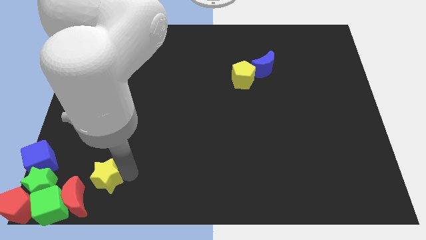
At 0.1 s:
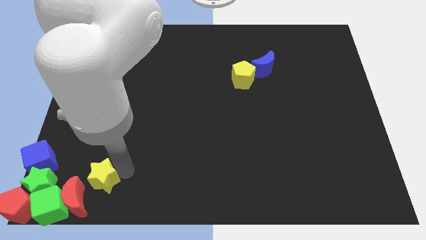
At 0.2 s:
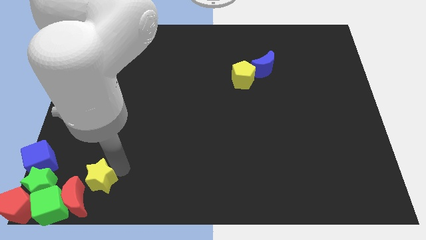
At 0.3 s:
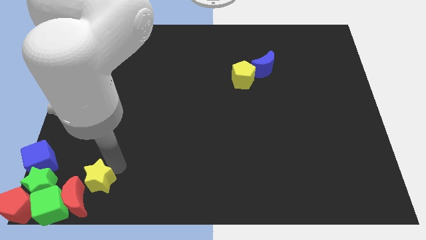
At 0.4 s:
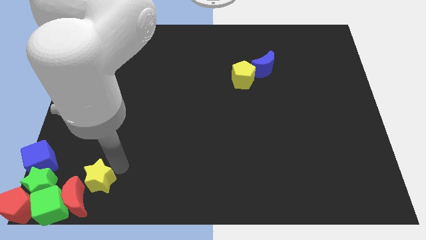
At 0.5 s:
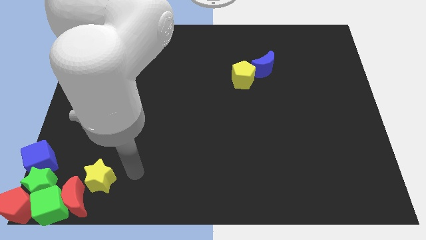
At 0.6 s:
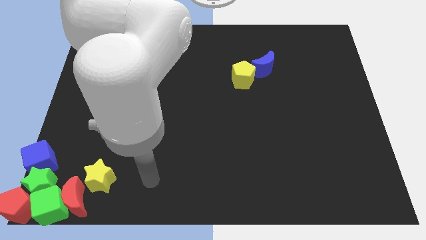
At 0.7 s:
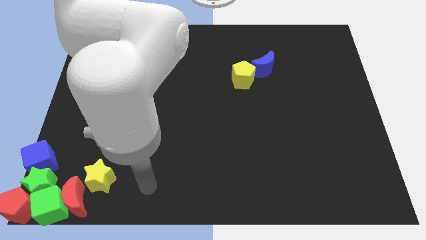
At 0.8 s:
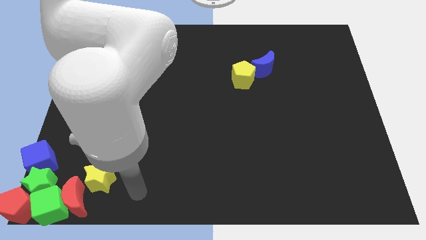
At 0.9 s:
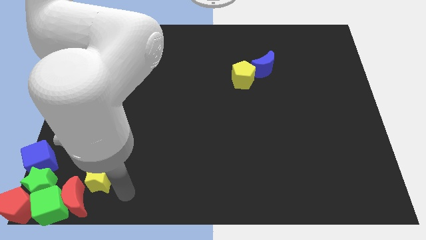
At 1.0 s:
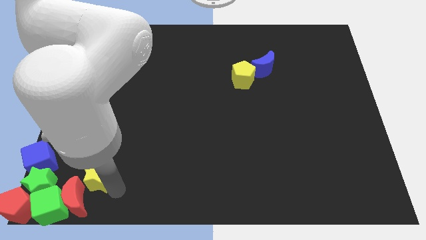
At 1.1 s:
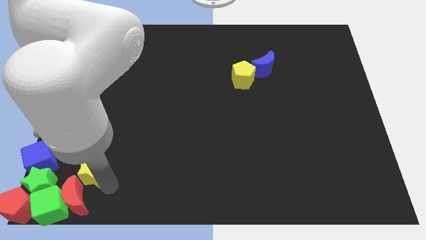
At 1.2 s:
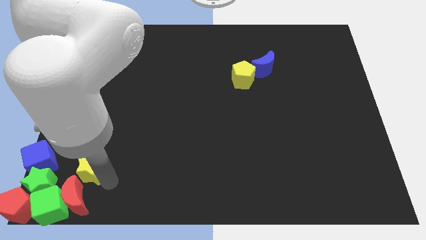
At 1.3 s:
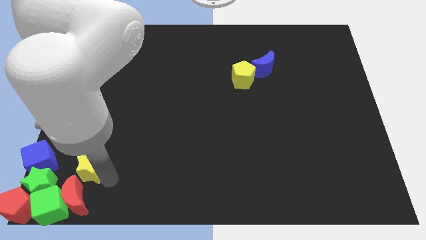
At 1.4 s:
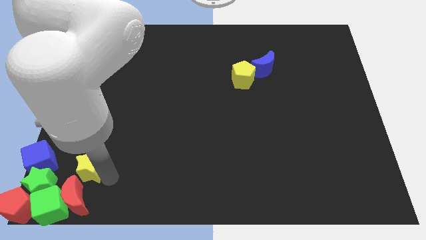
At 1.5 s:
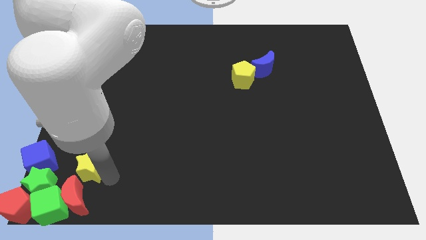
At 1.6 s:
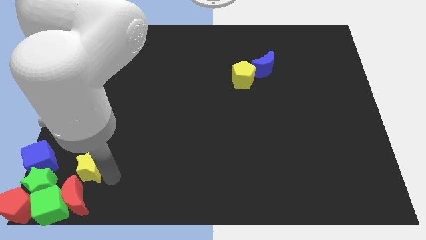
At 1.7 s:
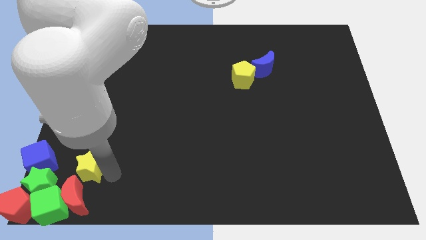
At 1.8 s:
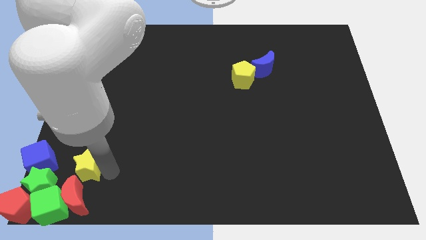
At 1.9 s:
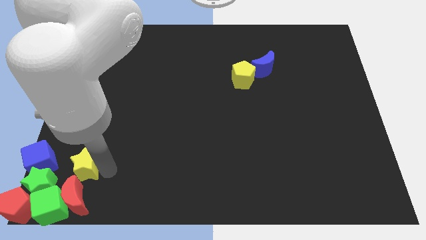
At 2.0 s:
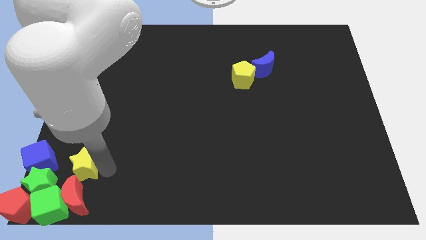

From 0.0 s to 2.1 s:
push the yellow star to the top of the red crescent

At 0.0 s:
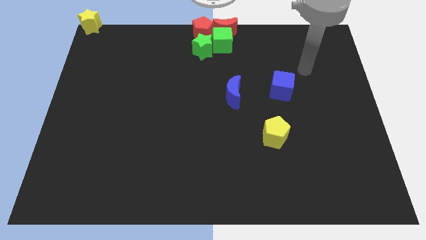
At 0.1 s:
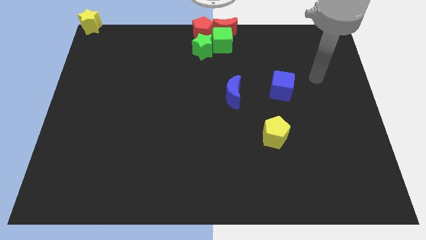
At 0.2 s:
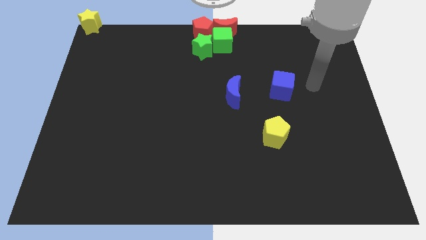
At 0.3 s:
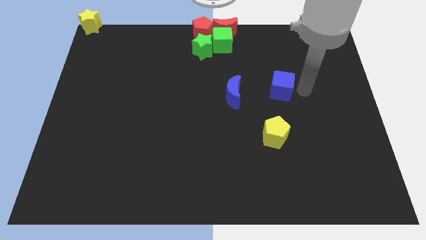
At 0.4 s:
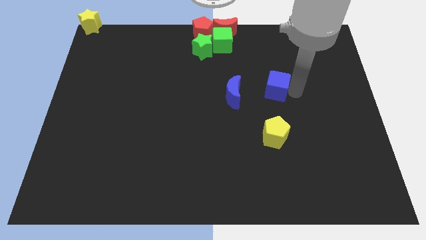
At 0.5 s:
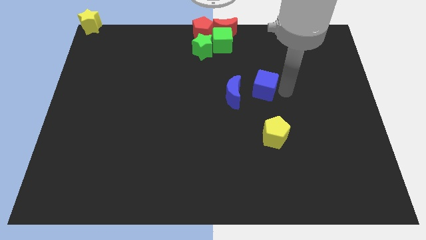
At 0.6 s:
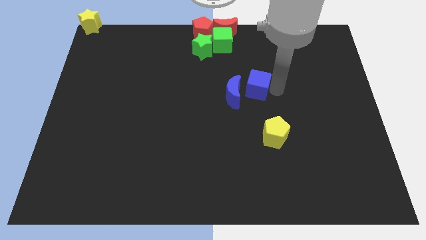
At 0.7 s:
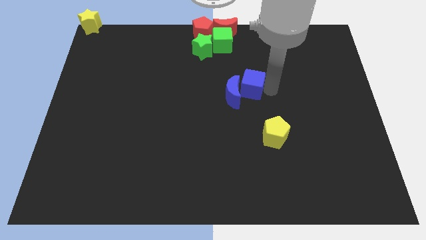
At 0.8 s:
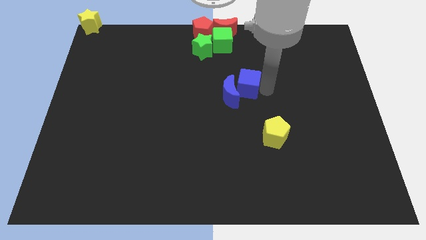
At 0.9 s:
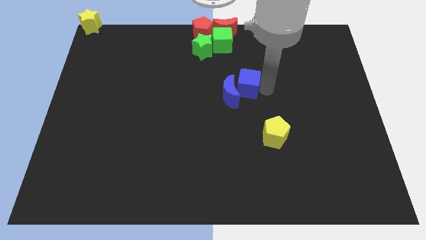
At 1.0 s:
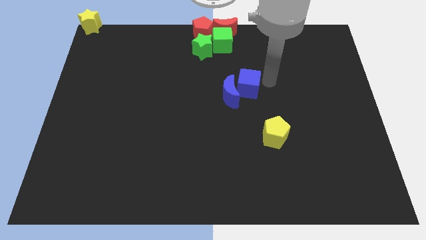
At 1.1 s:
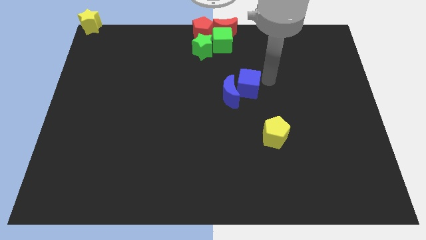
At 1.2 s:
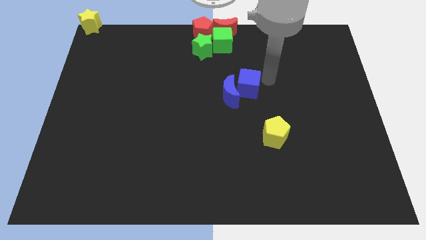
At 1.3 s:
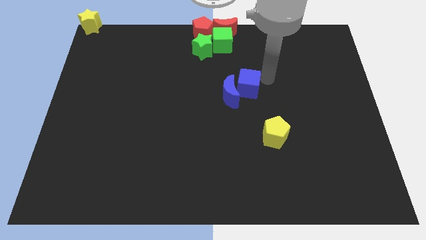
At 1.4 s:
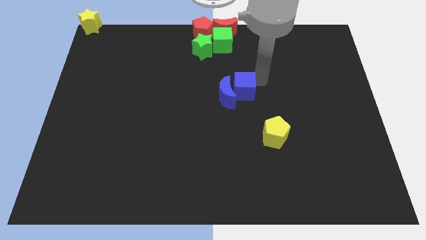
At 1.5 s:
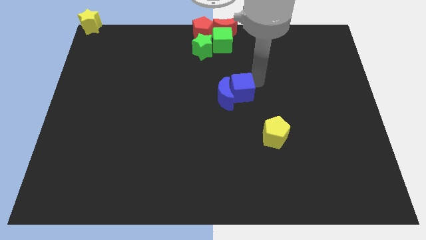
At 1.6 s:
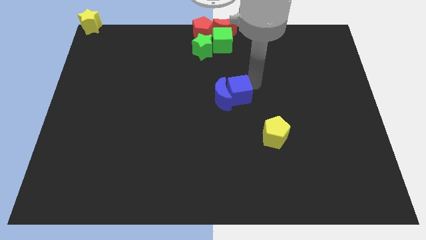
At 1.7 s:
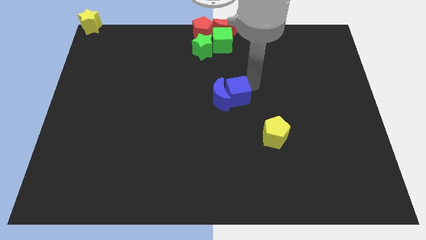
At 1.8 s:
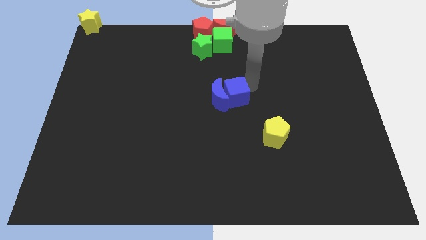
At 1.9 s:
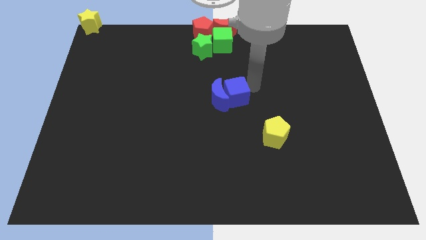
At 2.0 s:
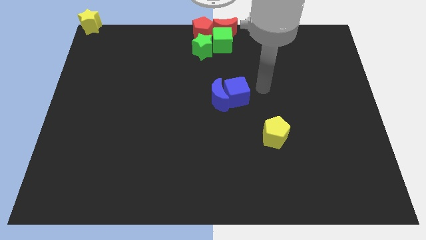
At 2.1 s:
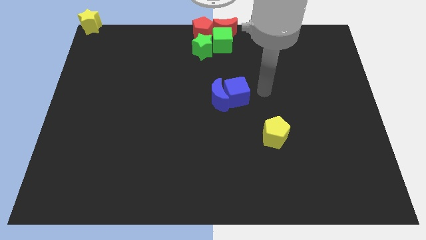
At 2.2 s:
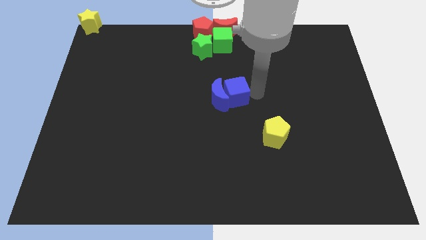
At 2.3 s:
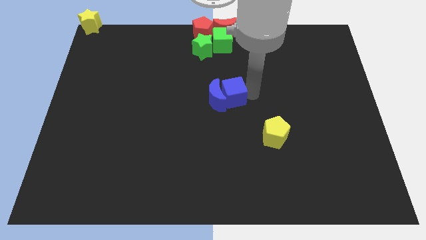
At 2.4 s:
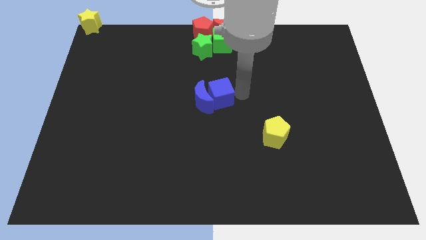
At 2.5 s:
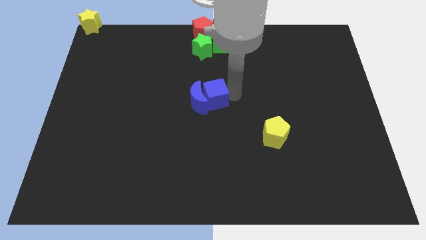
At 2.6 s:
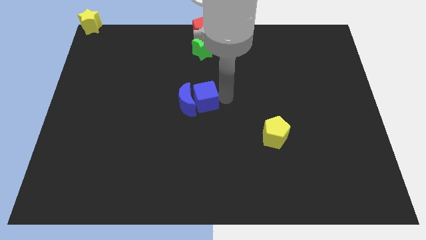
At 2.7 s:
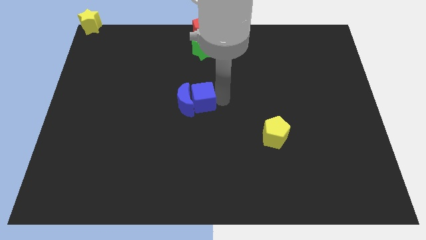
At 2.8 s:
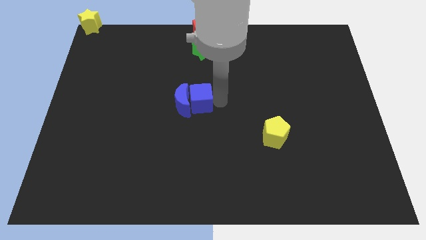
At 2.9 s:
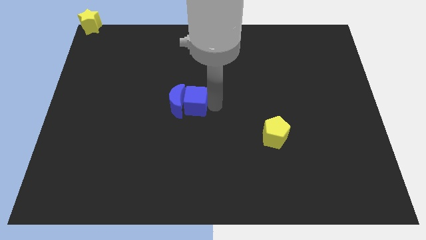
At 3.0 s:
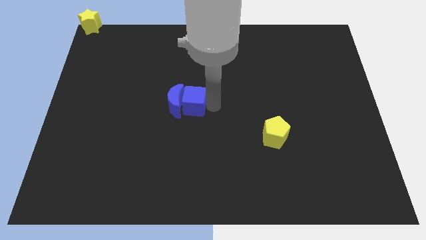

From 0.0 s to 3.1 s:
move blue blocks at center

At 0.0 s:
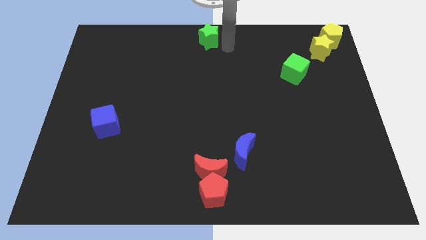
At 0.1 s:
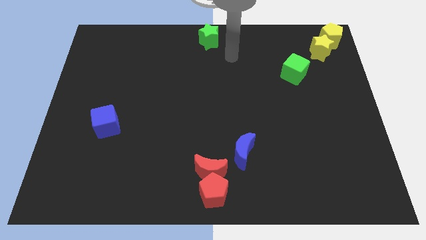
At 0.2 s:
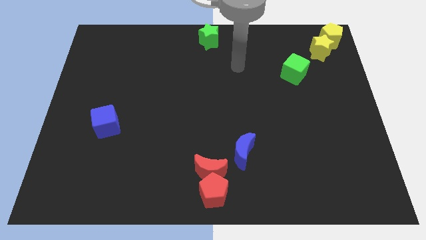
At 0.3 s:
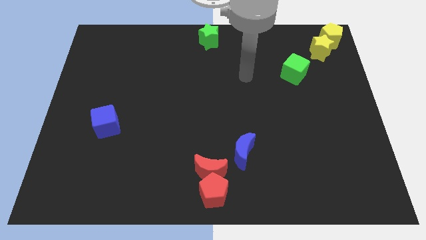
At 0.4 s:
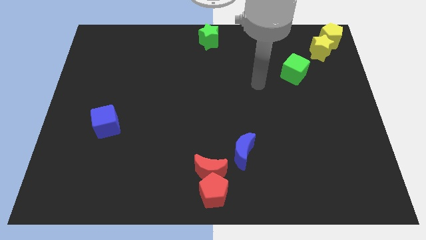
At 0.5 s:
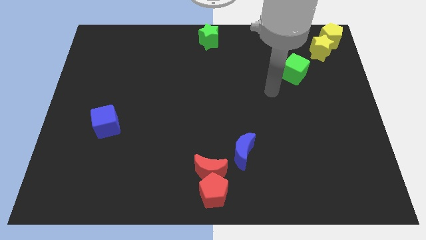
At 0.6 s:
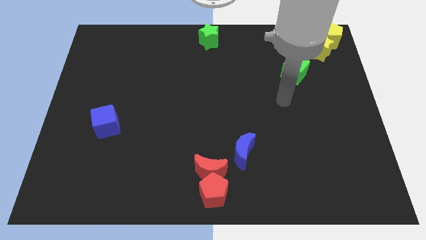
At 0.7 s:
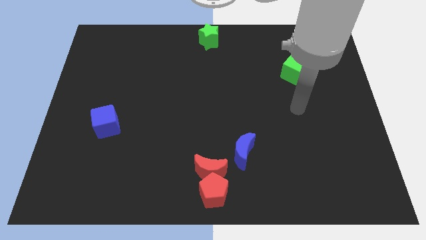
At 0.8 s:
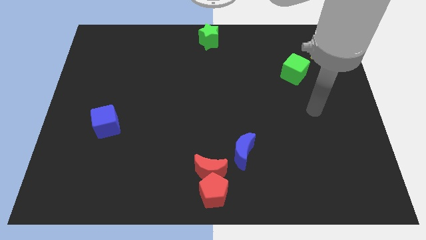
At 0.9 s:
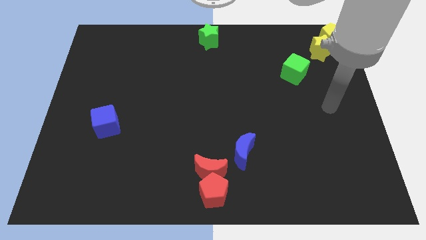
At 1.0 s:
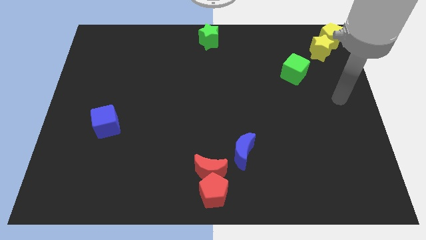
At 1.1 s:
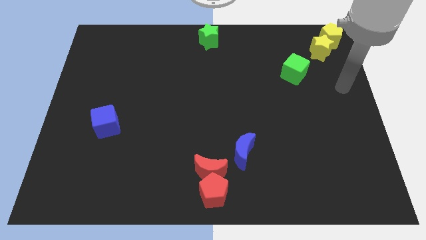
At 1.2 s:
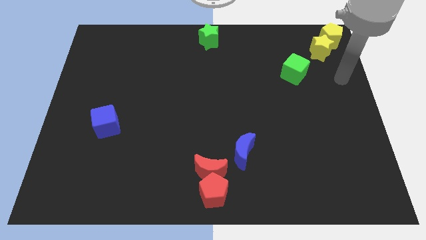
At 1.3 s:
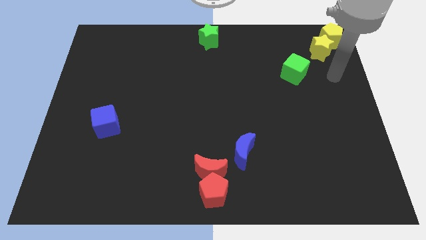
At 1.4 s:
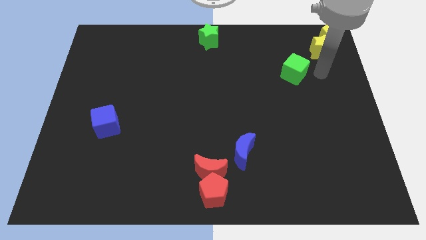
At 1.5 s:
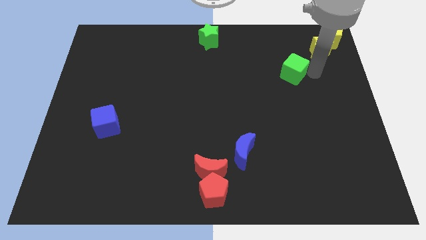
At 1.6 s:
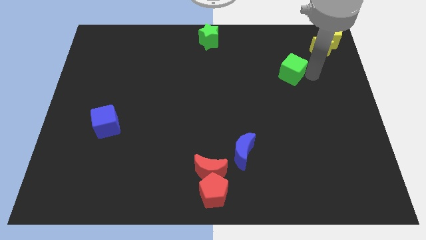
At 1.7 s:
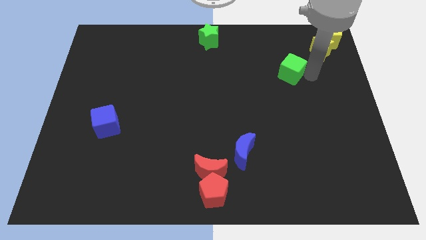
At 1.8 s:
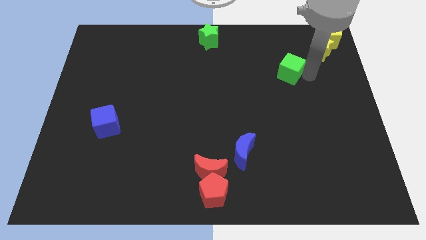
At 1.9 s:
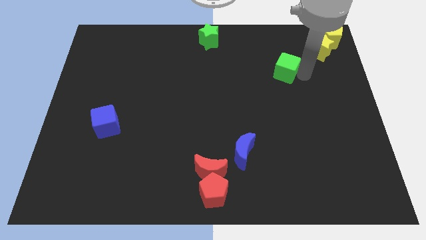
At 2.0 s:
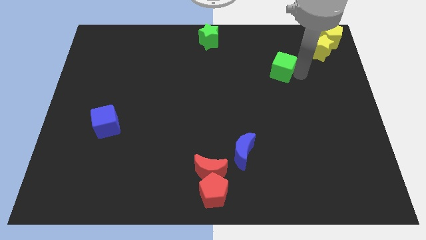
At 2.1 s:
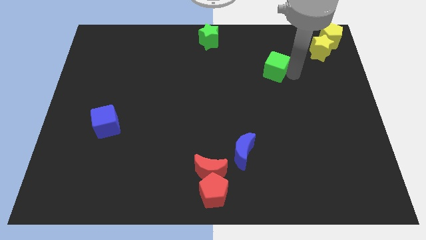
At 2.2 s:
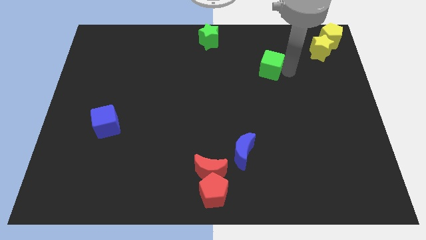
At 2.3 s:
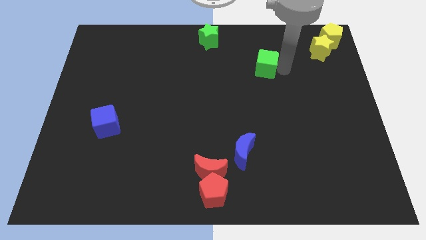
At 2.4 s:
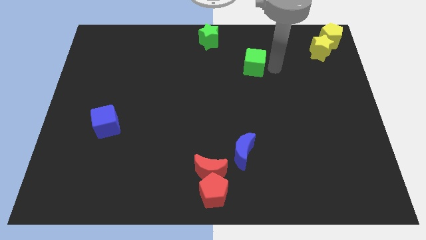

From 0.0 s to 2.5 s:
push the green cube towards the green star

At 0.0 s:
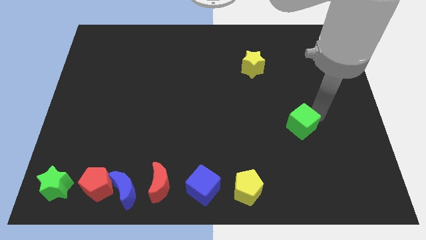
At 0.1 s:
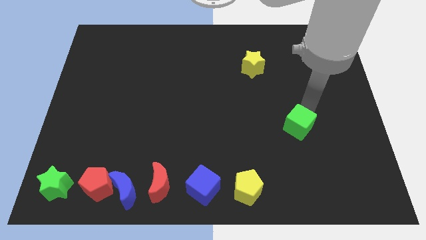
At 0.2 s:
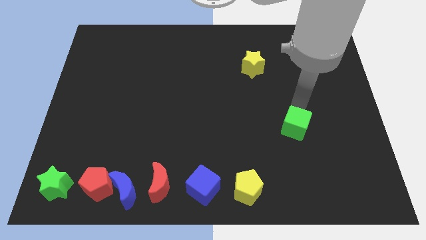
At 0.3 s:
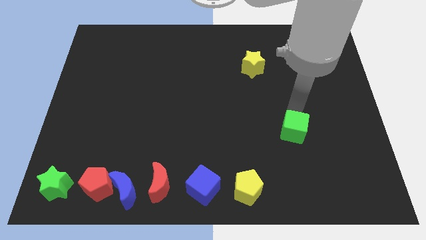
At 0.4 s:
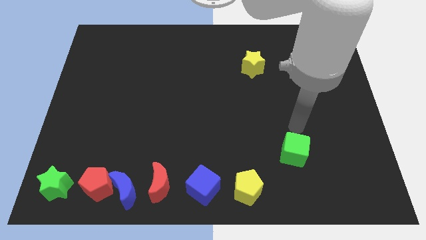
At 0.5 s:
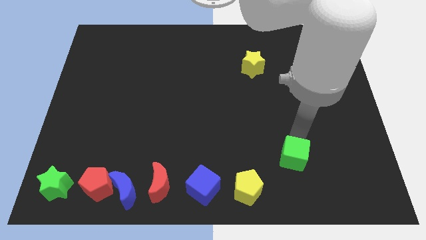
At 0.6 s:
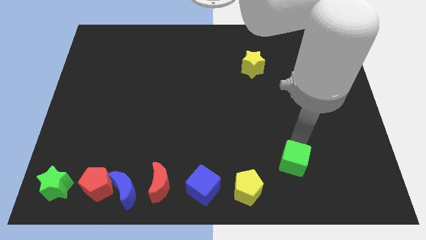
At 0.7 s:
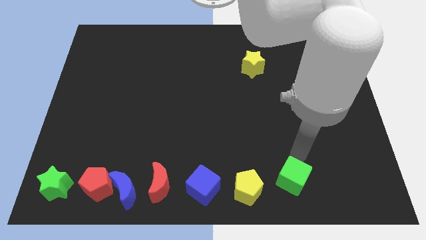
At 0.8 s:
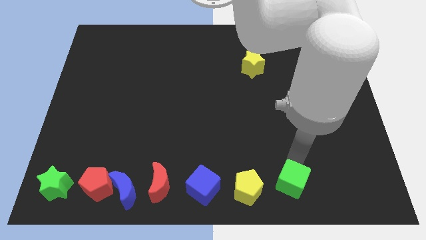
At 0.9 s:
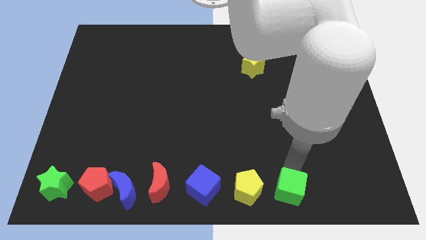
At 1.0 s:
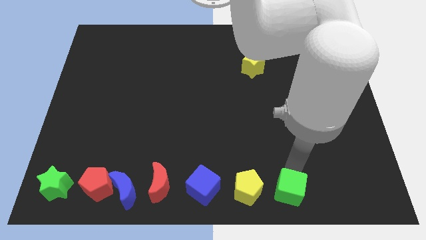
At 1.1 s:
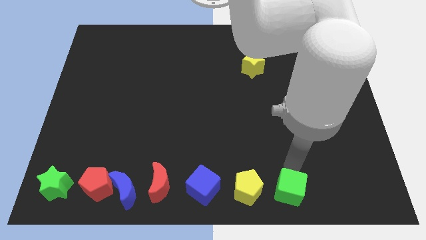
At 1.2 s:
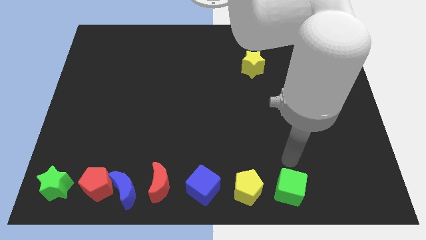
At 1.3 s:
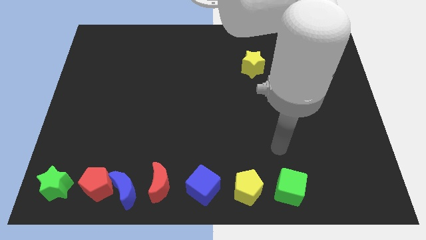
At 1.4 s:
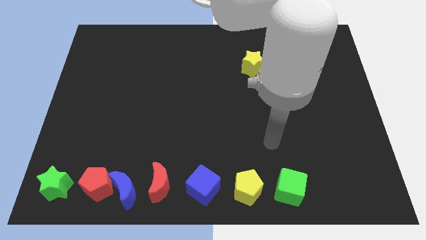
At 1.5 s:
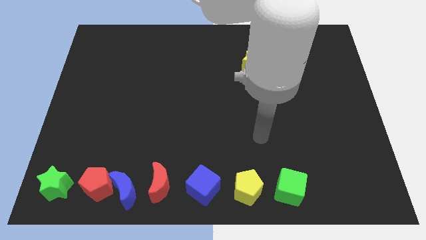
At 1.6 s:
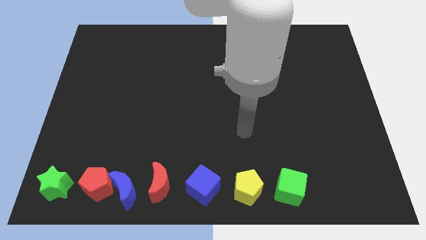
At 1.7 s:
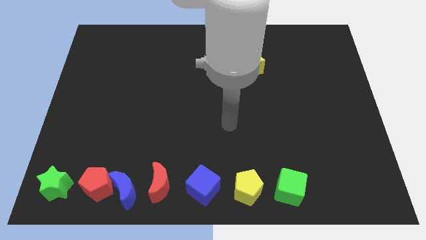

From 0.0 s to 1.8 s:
put the green cube right side to the yellow pentagon
